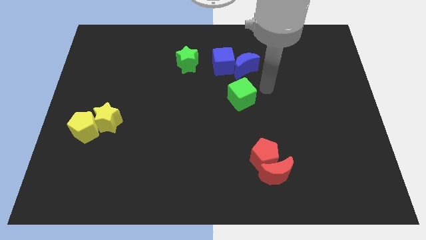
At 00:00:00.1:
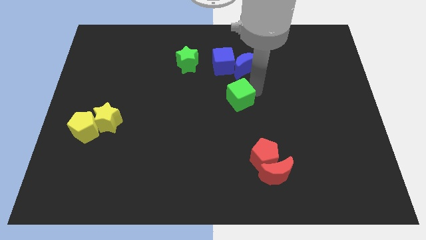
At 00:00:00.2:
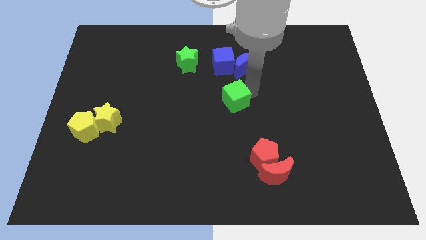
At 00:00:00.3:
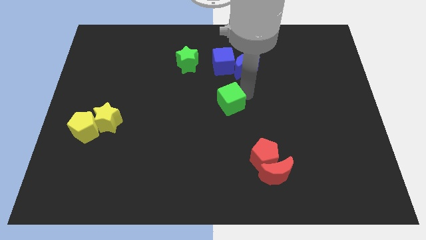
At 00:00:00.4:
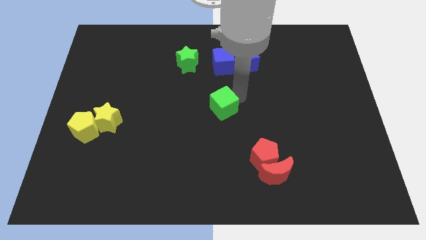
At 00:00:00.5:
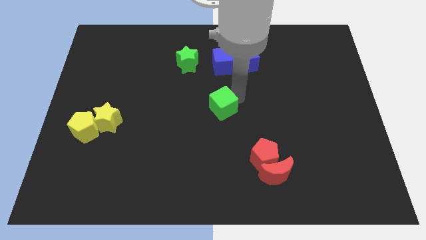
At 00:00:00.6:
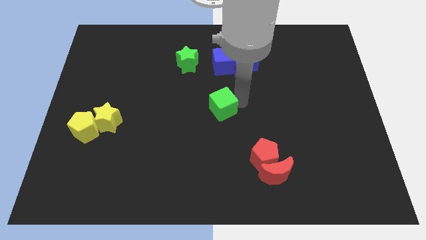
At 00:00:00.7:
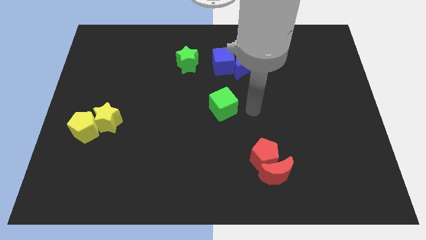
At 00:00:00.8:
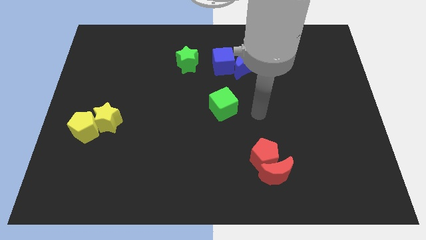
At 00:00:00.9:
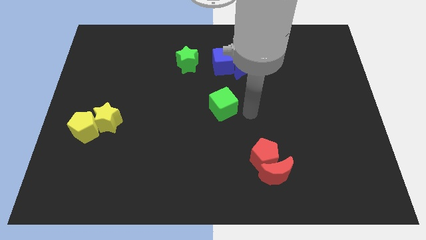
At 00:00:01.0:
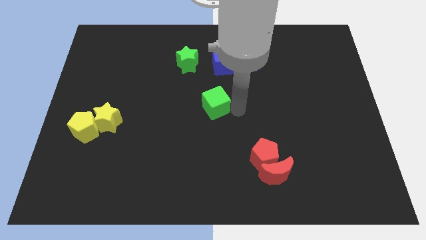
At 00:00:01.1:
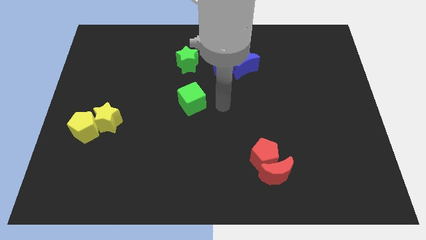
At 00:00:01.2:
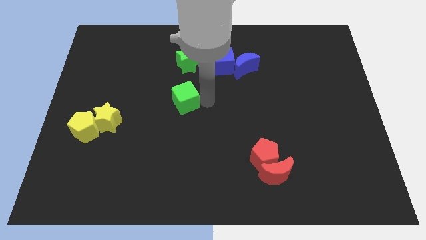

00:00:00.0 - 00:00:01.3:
place green cube below green star

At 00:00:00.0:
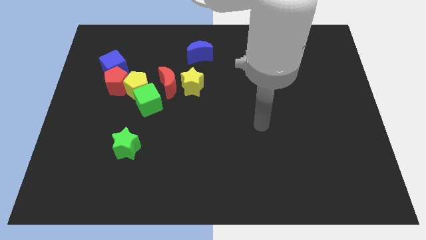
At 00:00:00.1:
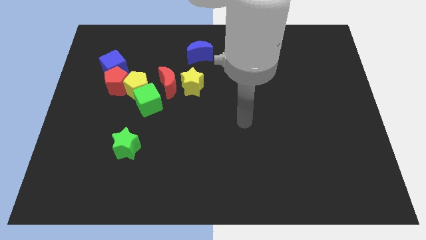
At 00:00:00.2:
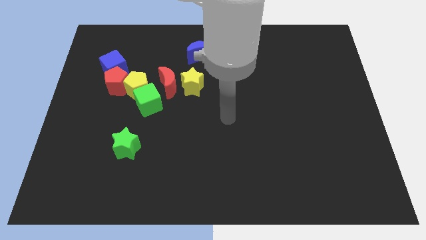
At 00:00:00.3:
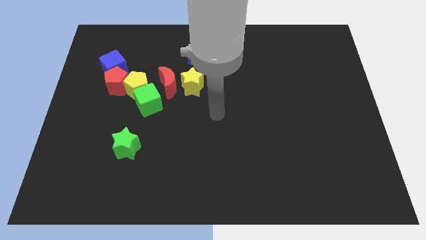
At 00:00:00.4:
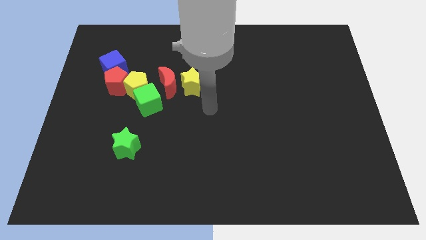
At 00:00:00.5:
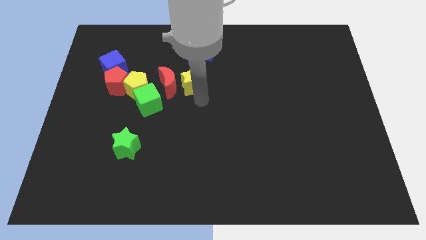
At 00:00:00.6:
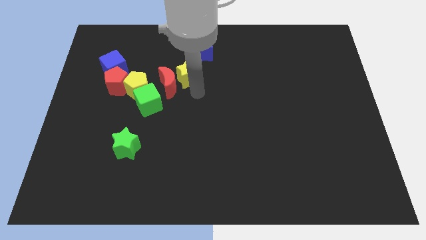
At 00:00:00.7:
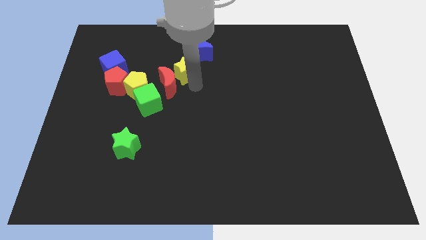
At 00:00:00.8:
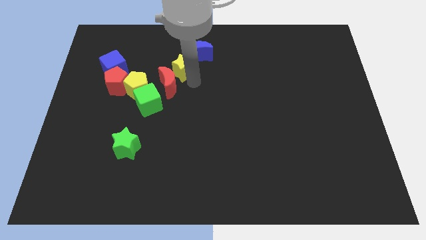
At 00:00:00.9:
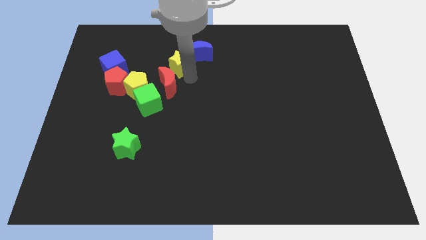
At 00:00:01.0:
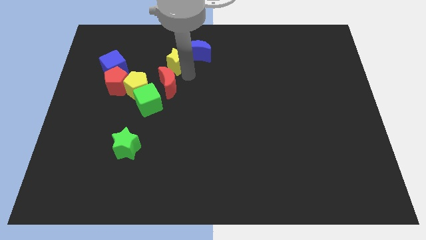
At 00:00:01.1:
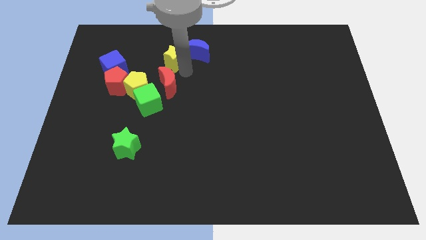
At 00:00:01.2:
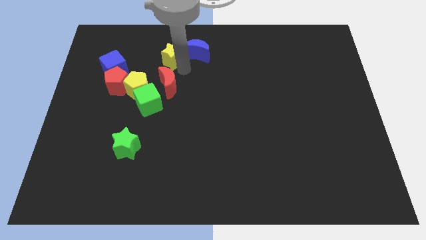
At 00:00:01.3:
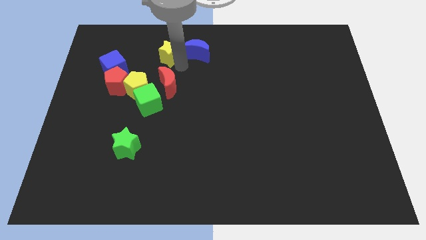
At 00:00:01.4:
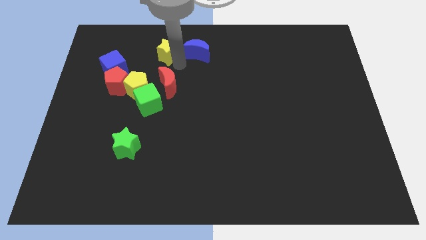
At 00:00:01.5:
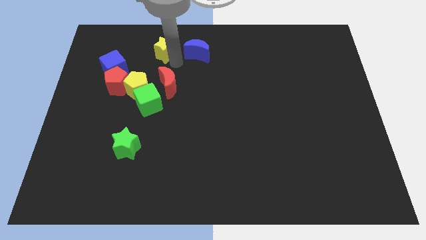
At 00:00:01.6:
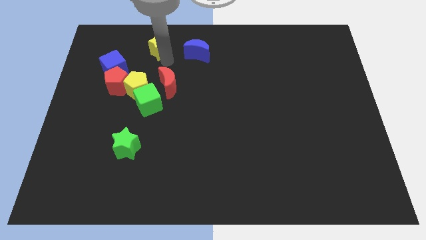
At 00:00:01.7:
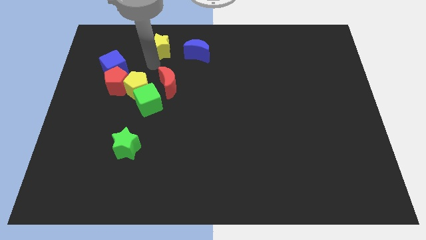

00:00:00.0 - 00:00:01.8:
push the yellow star towards up

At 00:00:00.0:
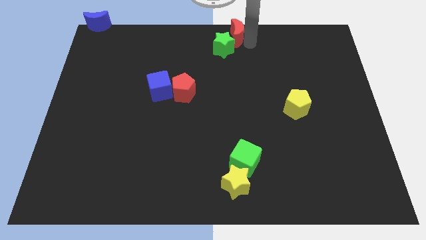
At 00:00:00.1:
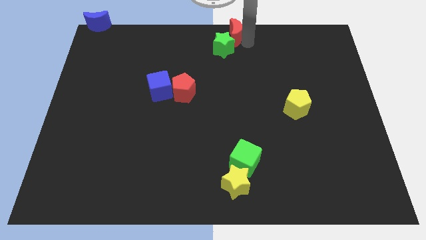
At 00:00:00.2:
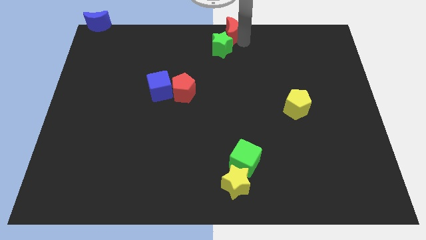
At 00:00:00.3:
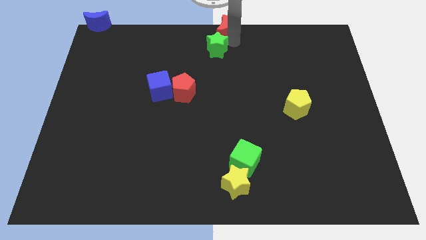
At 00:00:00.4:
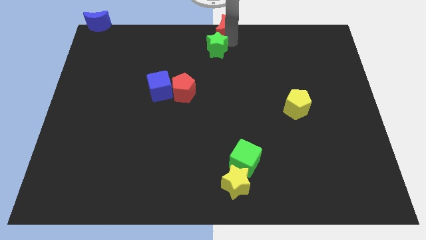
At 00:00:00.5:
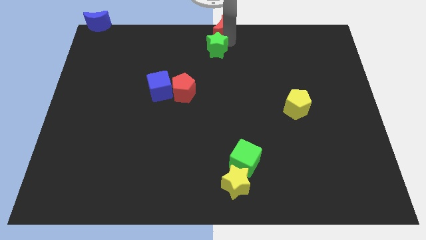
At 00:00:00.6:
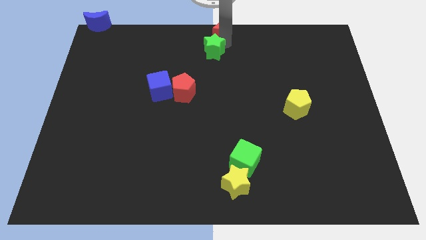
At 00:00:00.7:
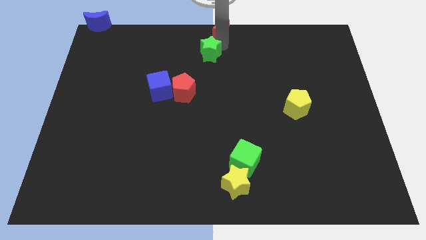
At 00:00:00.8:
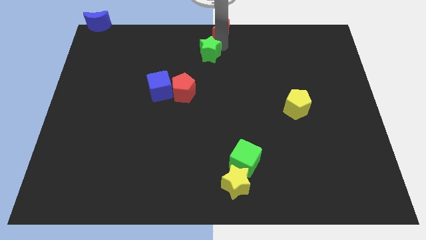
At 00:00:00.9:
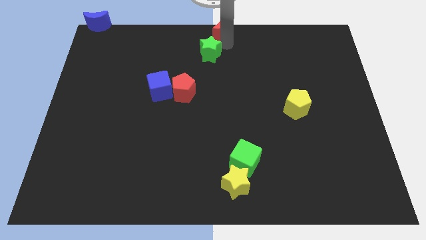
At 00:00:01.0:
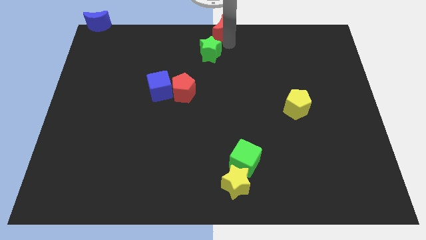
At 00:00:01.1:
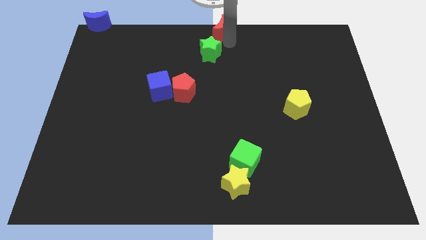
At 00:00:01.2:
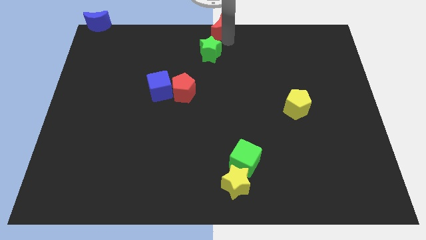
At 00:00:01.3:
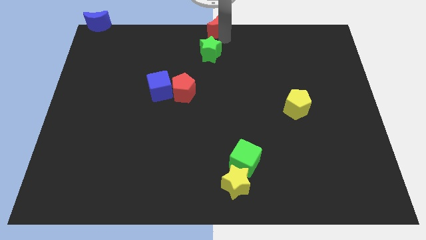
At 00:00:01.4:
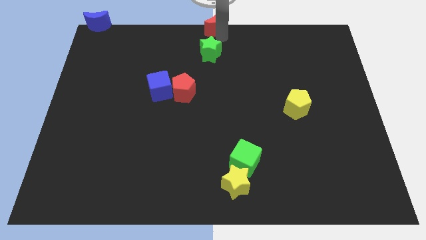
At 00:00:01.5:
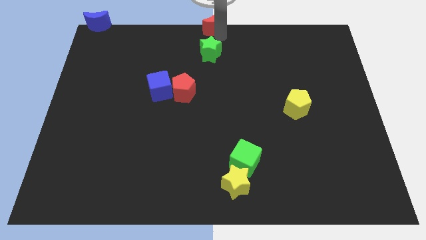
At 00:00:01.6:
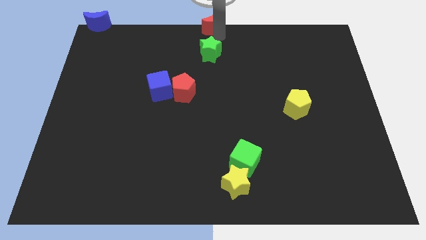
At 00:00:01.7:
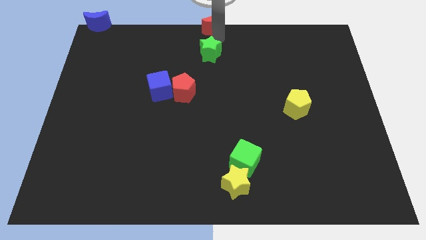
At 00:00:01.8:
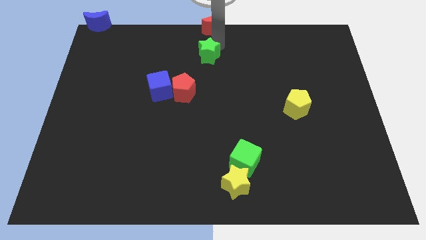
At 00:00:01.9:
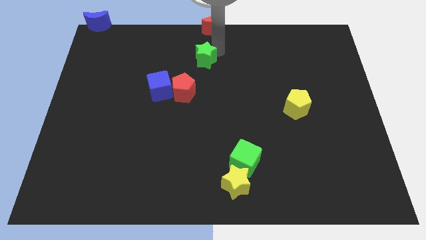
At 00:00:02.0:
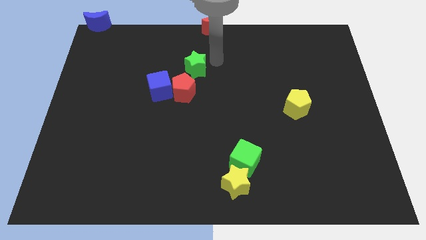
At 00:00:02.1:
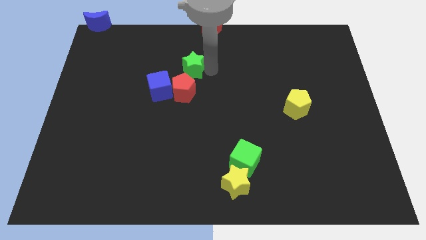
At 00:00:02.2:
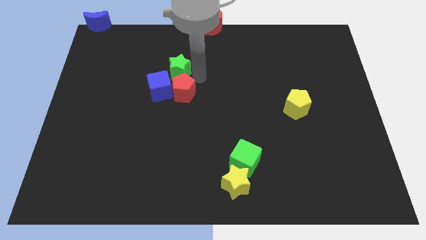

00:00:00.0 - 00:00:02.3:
move the green star above to the red pentagon

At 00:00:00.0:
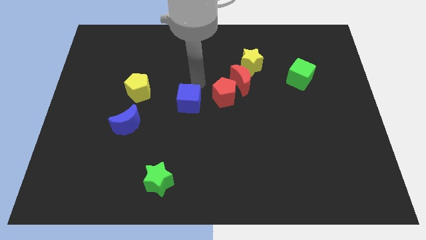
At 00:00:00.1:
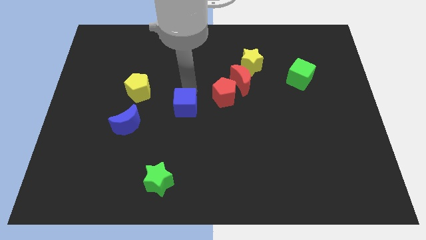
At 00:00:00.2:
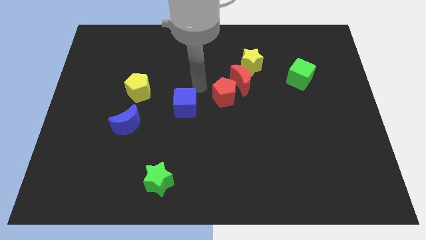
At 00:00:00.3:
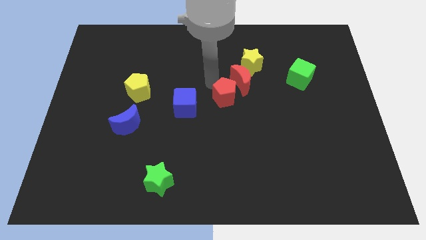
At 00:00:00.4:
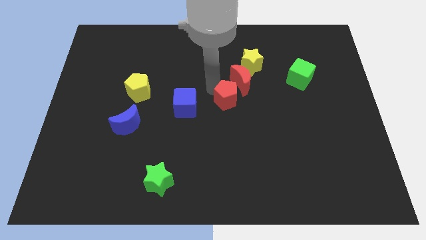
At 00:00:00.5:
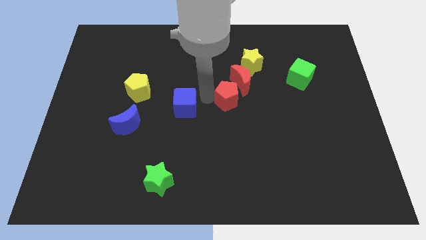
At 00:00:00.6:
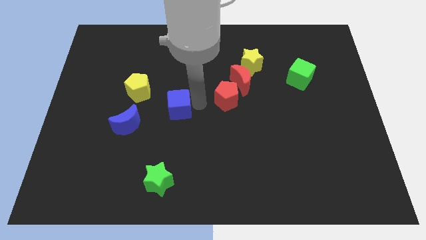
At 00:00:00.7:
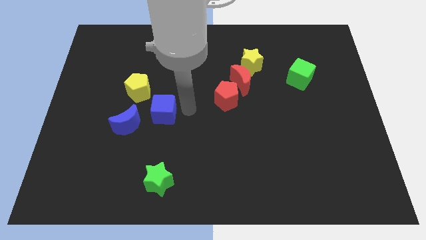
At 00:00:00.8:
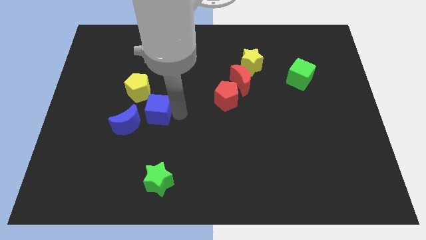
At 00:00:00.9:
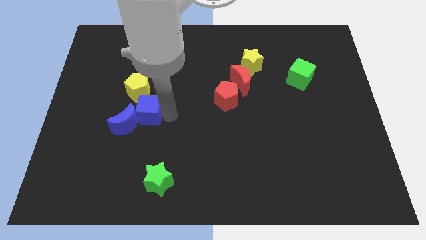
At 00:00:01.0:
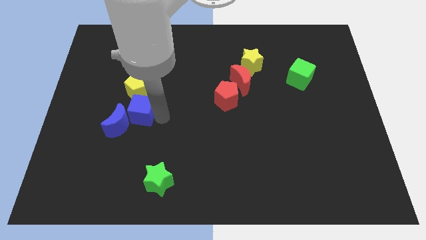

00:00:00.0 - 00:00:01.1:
slide blue cube into blue moon

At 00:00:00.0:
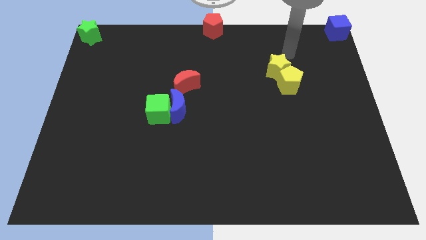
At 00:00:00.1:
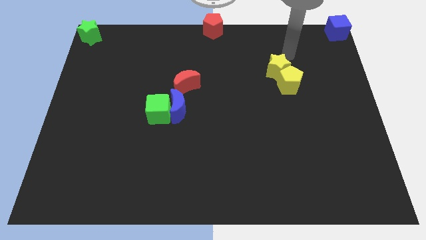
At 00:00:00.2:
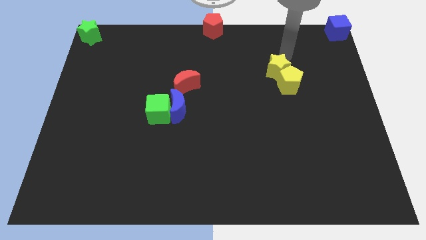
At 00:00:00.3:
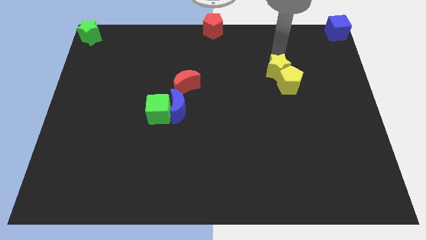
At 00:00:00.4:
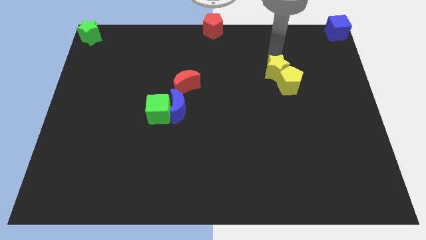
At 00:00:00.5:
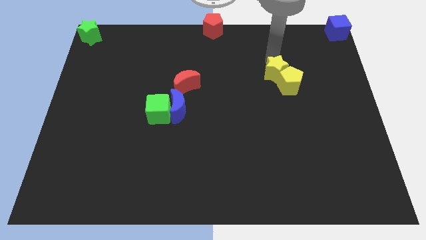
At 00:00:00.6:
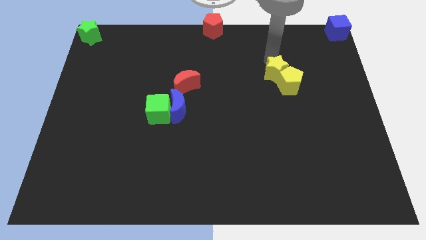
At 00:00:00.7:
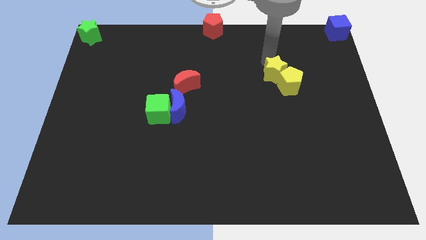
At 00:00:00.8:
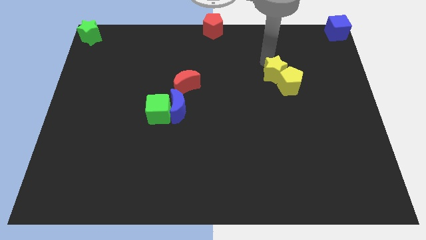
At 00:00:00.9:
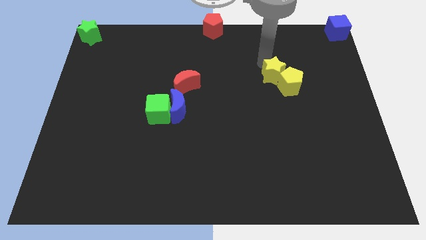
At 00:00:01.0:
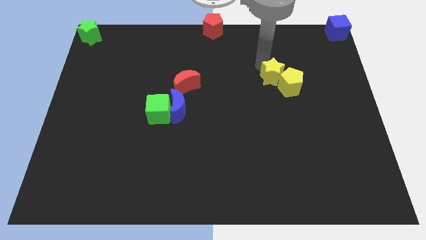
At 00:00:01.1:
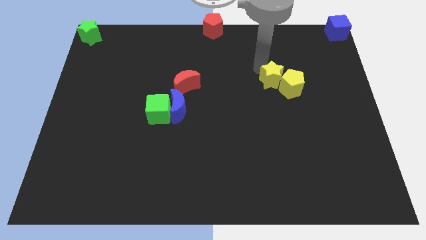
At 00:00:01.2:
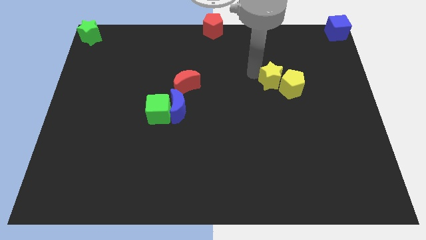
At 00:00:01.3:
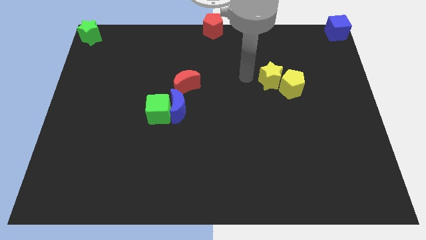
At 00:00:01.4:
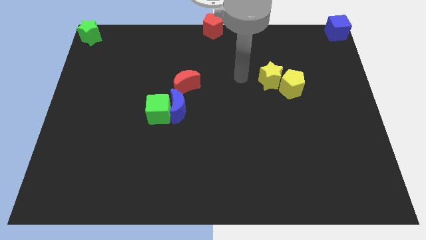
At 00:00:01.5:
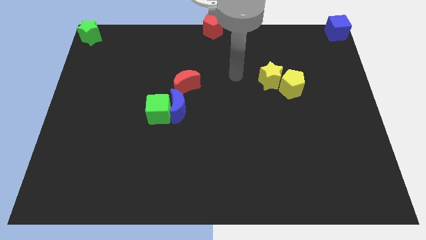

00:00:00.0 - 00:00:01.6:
touch the yellow blocks

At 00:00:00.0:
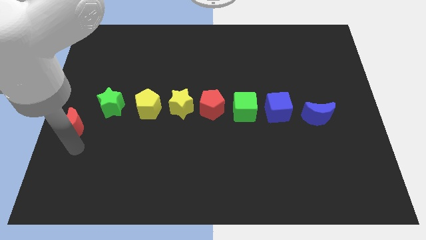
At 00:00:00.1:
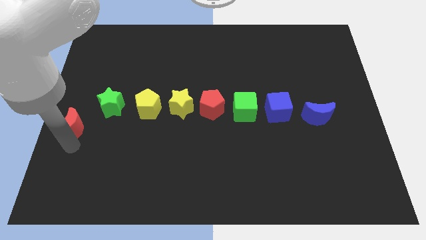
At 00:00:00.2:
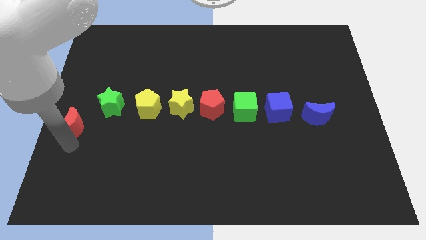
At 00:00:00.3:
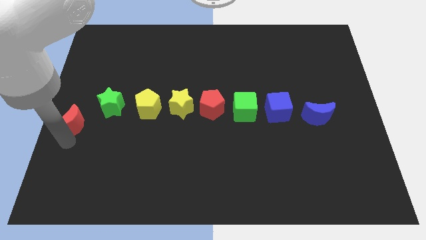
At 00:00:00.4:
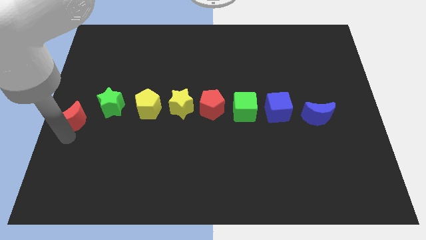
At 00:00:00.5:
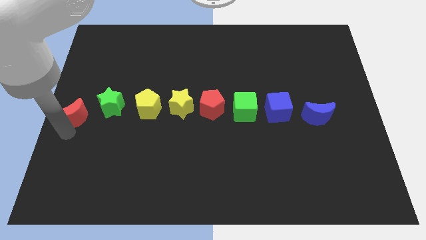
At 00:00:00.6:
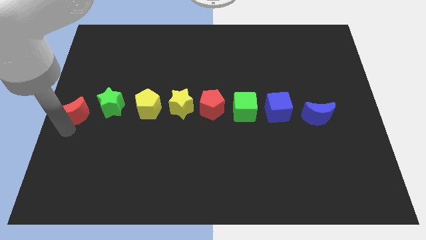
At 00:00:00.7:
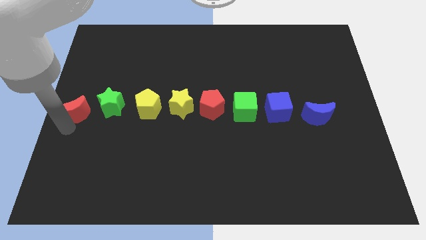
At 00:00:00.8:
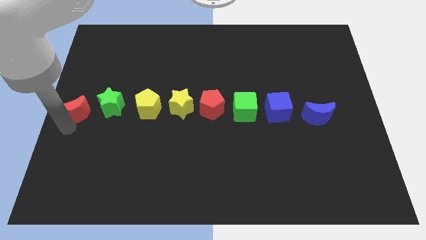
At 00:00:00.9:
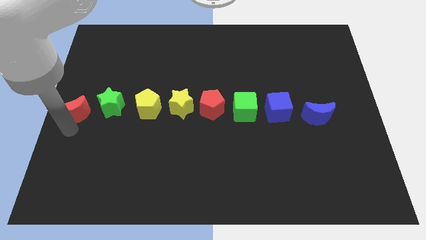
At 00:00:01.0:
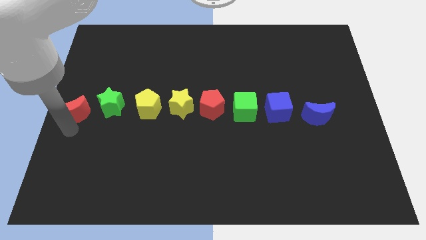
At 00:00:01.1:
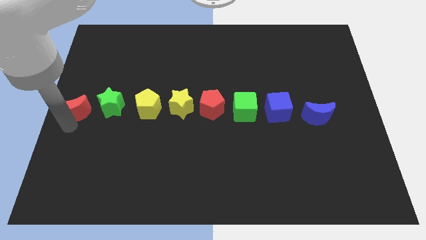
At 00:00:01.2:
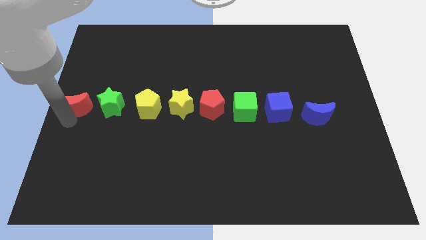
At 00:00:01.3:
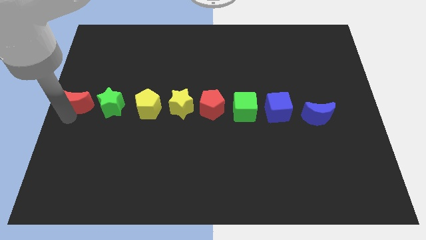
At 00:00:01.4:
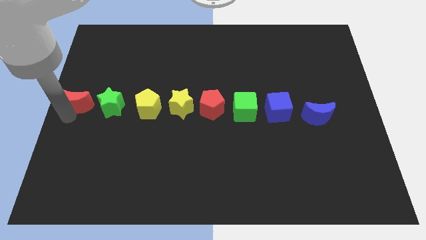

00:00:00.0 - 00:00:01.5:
place red moon beside green star
